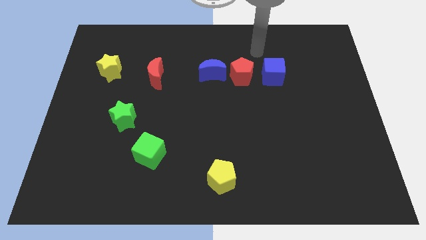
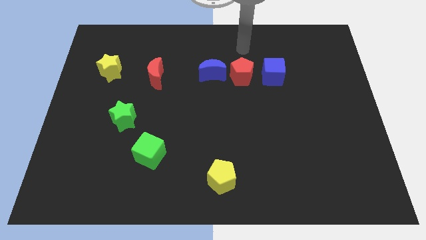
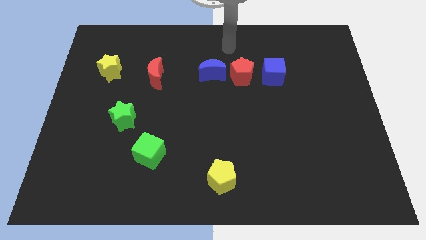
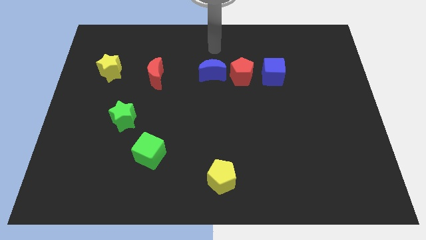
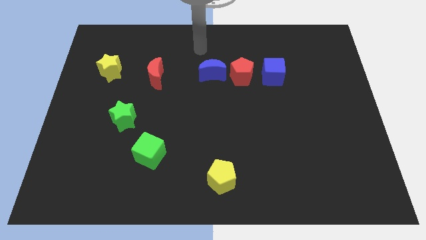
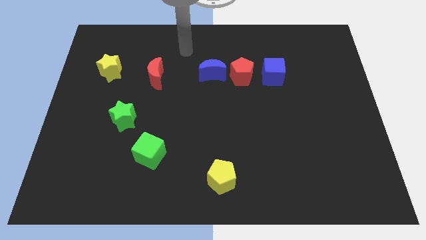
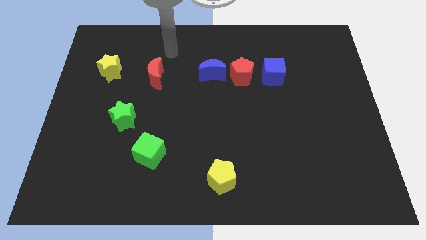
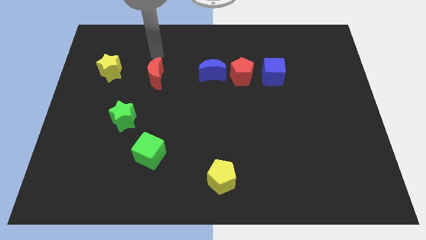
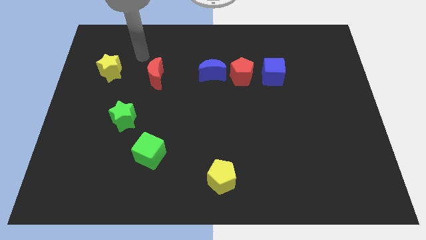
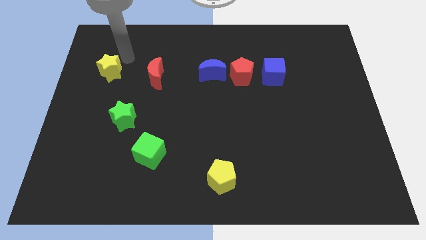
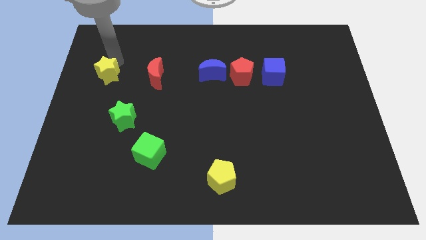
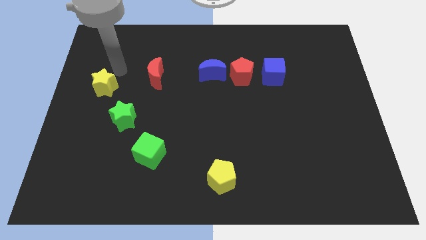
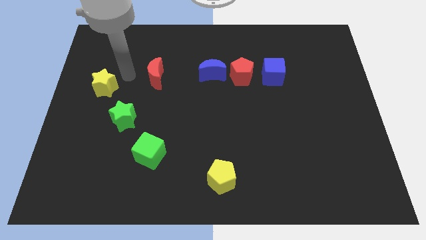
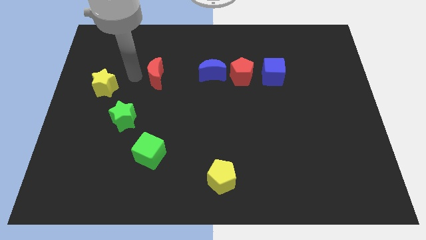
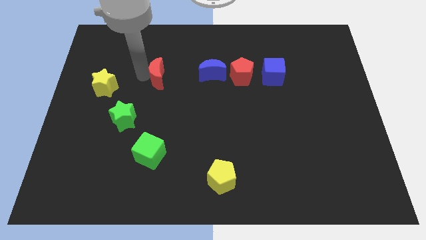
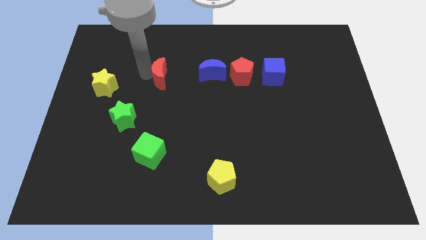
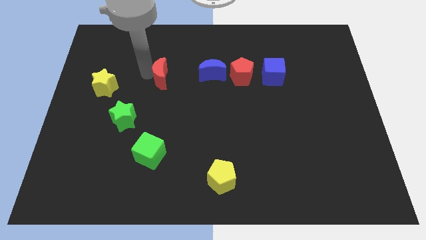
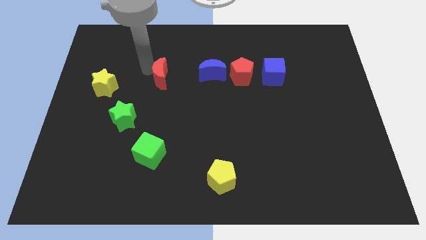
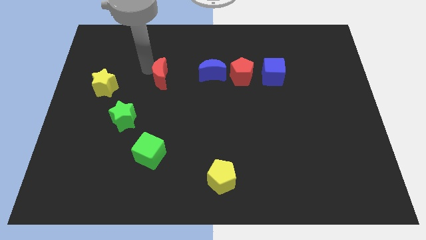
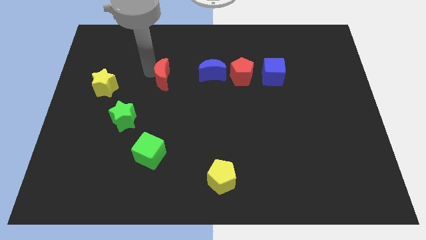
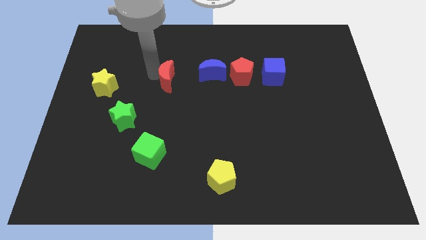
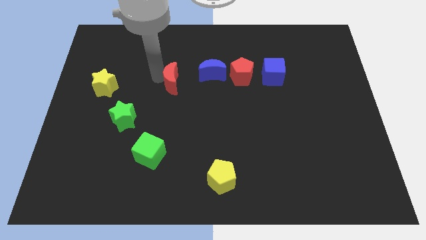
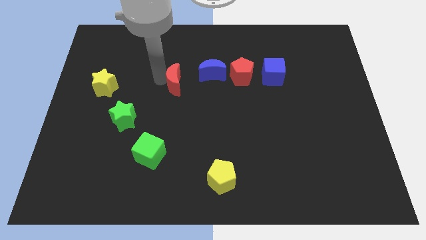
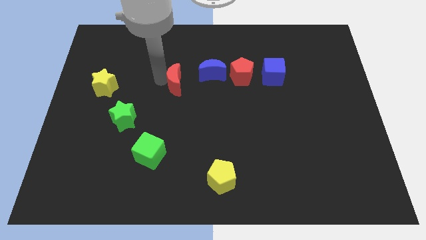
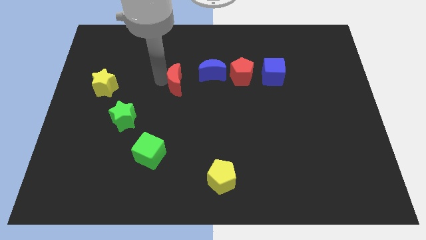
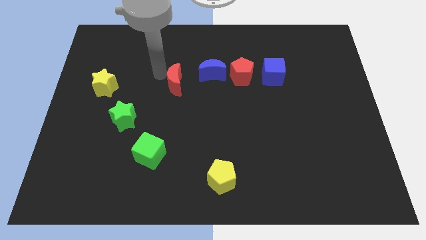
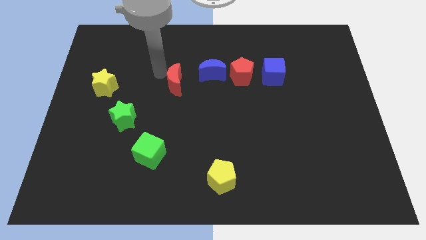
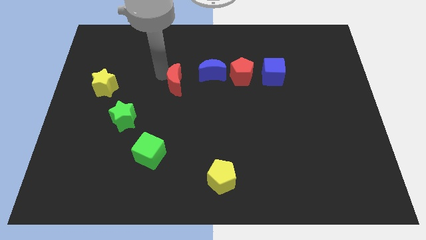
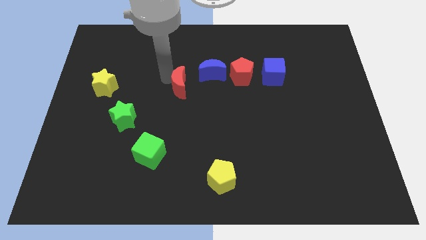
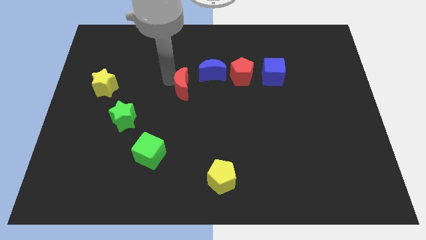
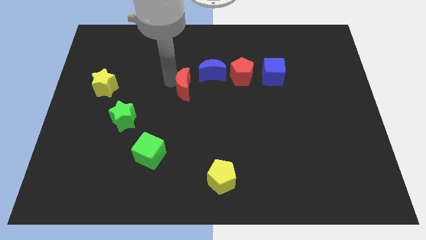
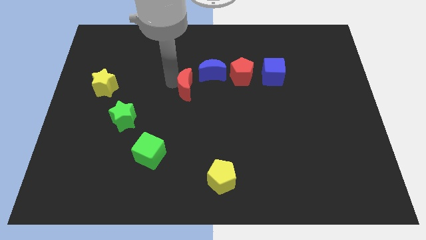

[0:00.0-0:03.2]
move the red crescent and the yellow star in opposite directions

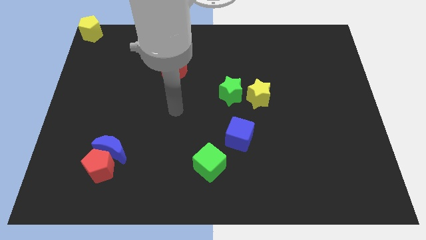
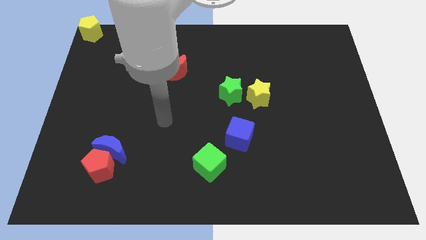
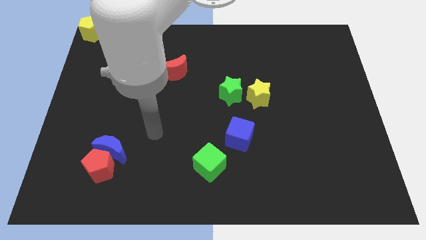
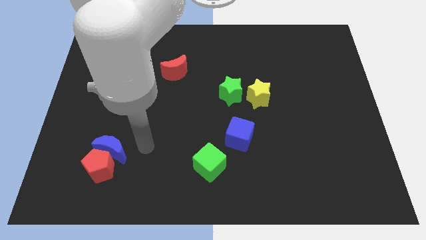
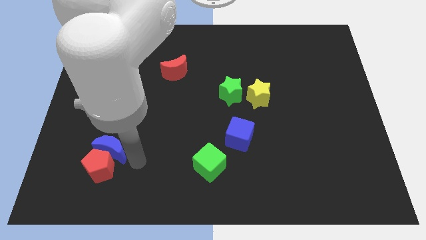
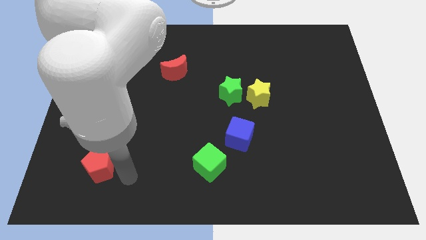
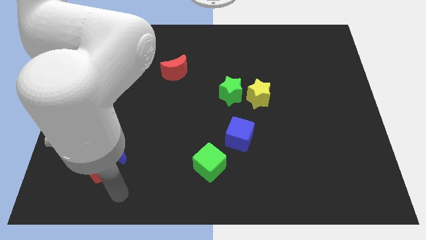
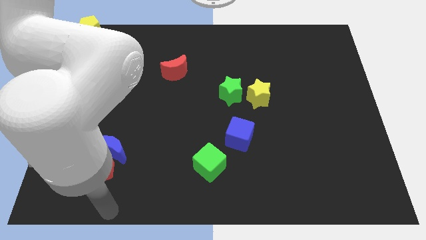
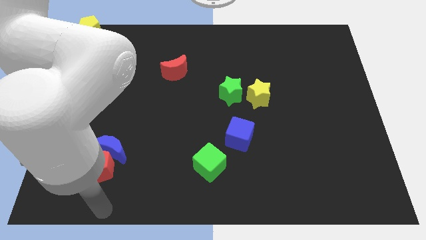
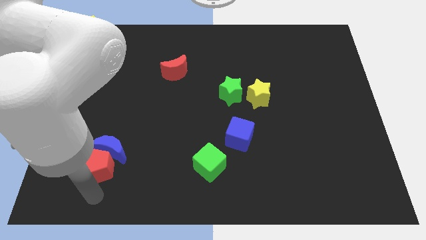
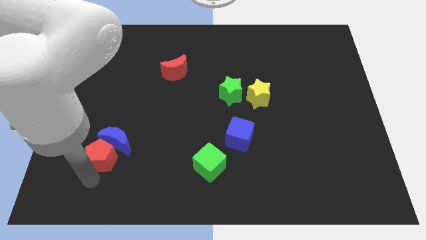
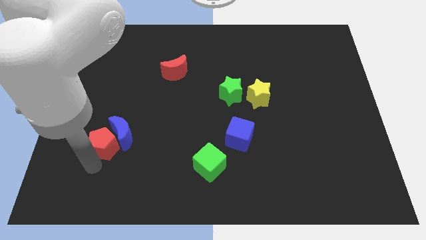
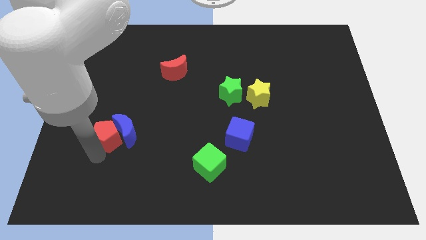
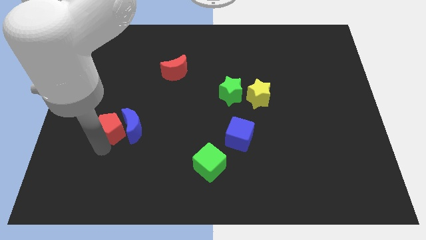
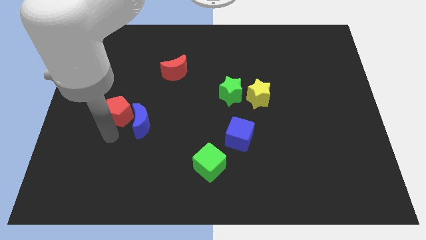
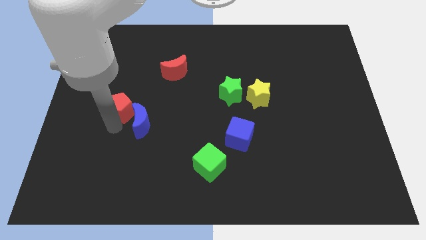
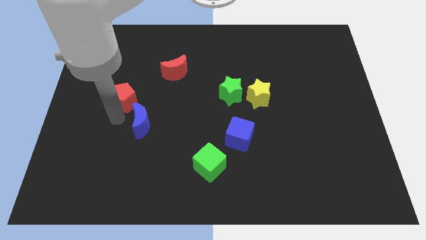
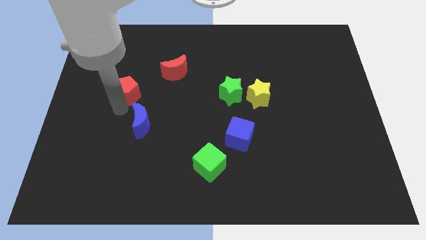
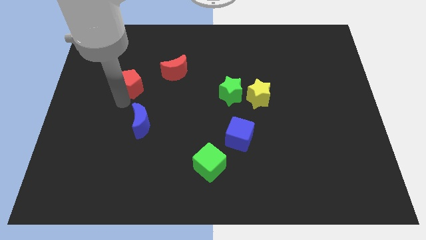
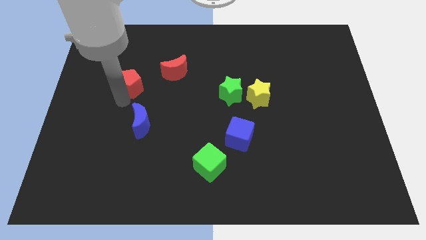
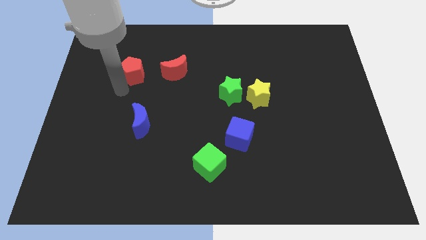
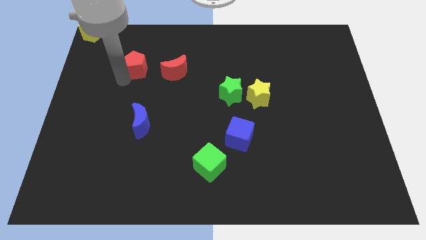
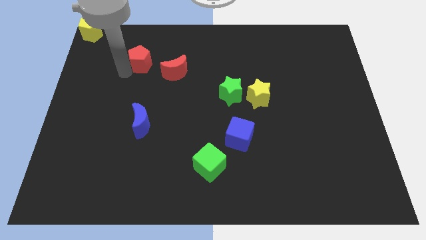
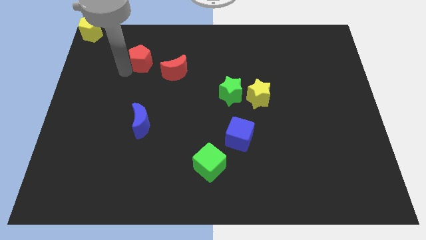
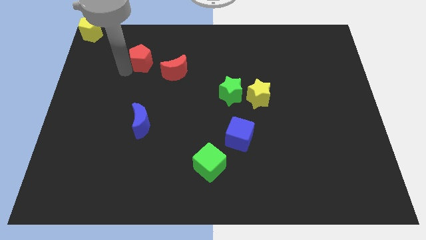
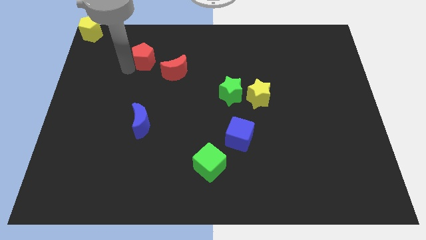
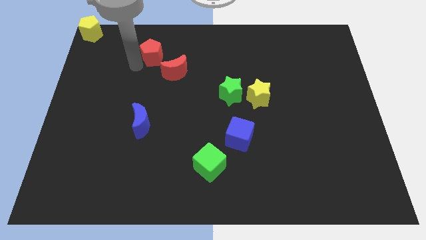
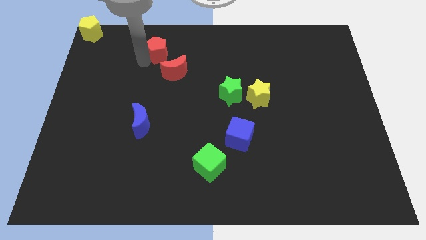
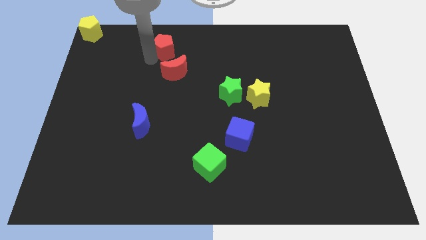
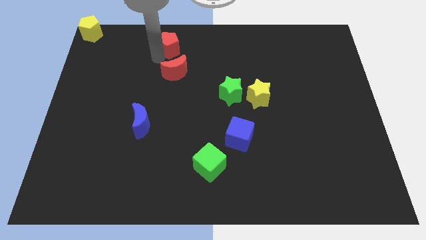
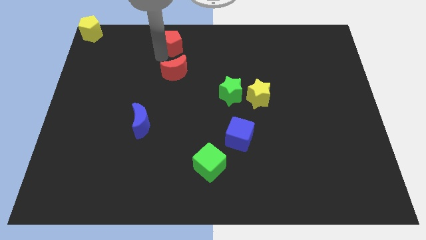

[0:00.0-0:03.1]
move red pentagon to the top of red moon

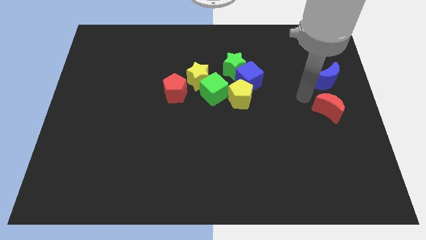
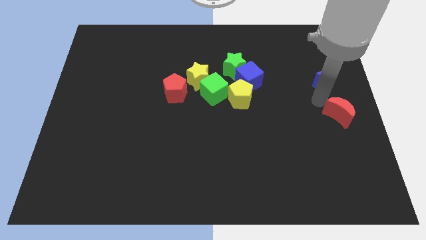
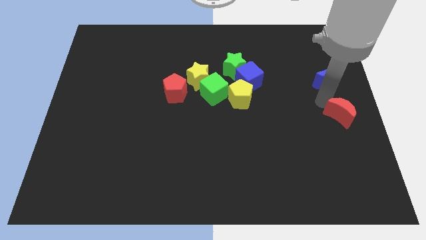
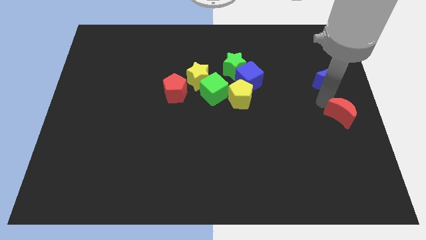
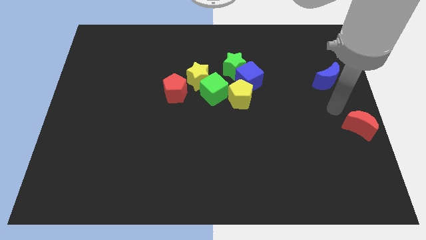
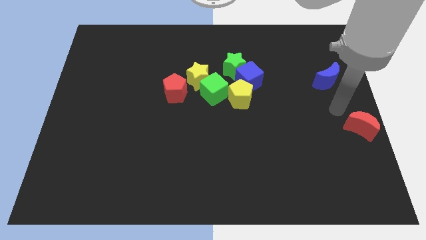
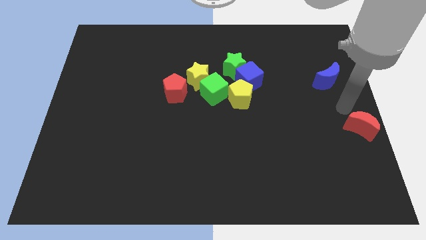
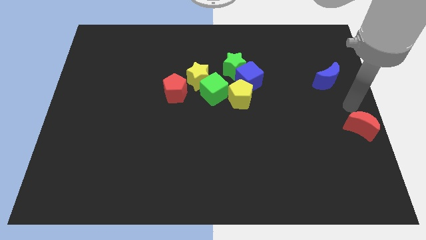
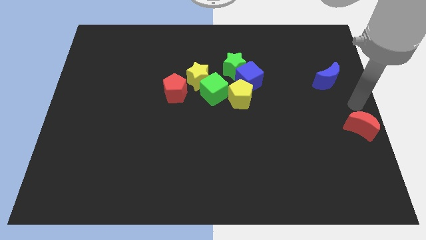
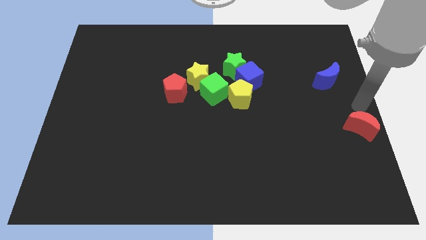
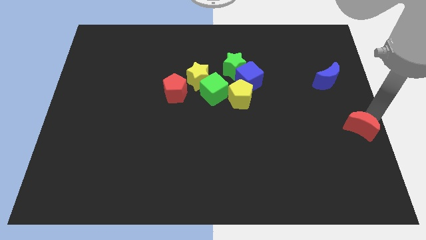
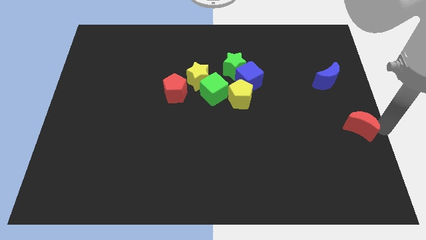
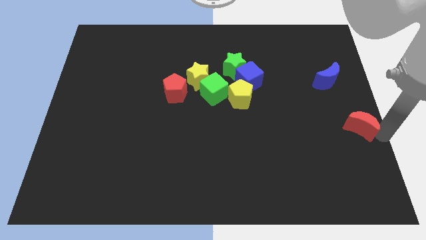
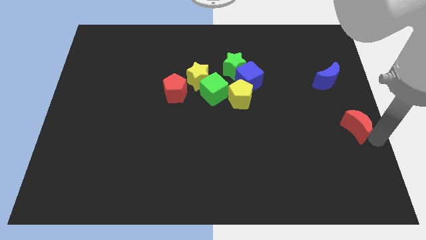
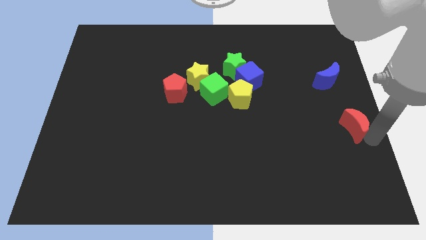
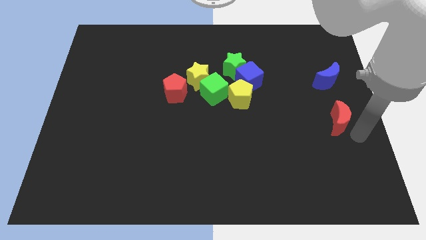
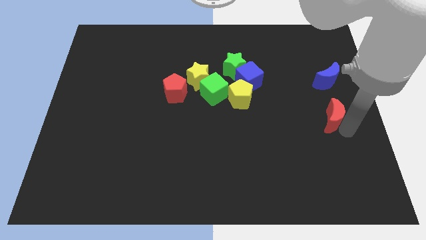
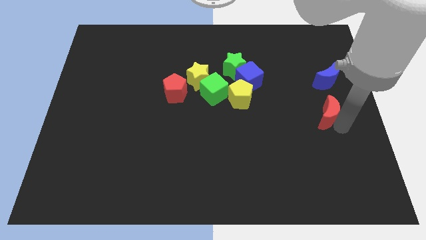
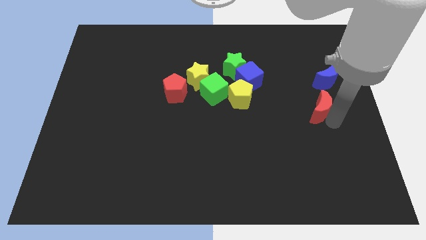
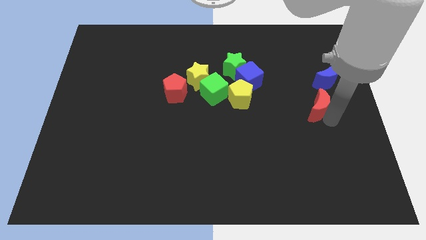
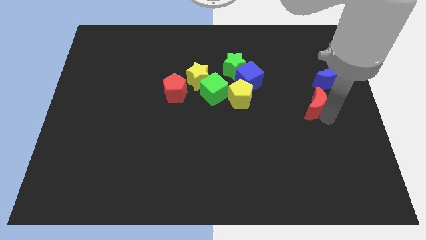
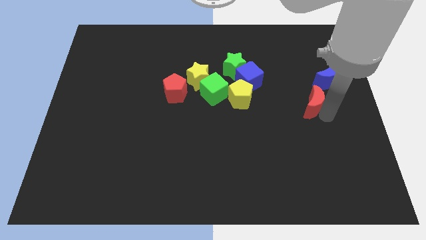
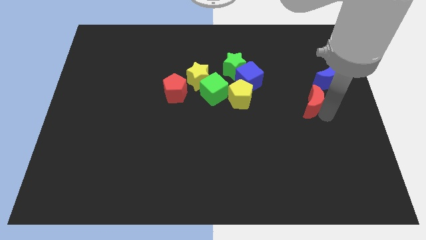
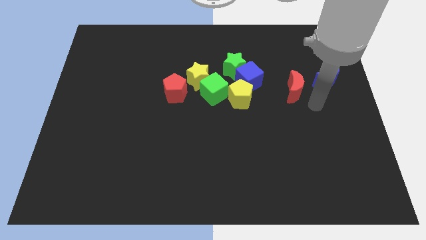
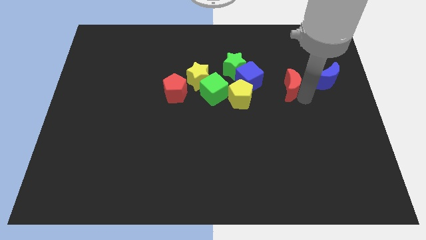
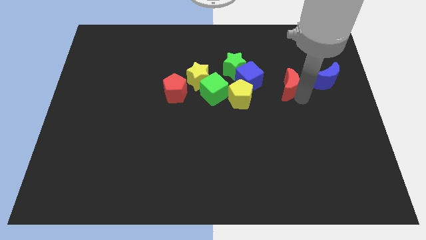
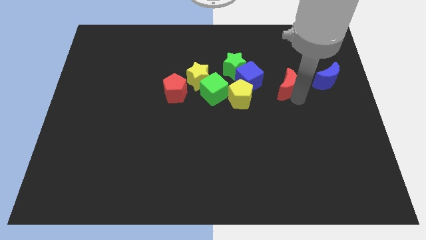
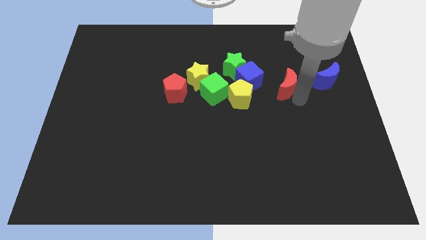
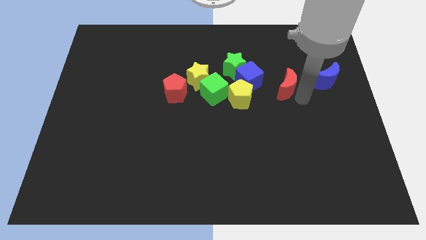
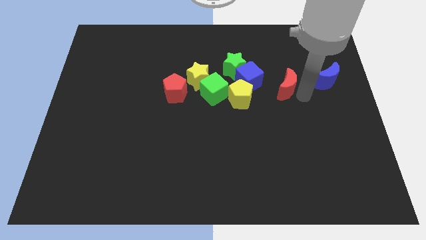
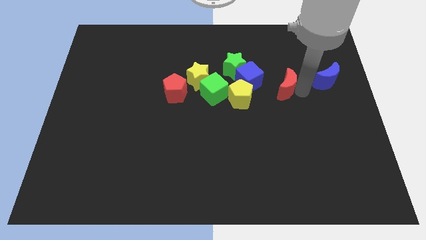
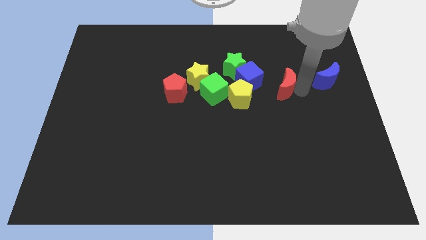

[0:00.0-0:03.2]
move the red crescent right to the blue cube
